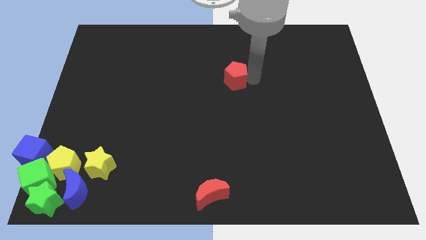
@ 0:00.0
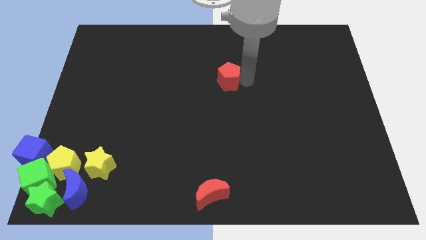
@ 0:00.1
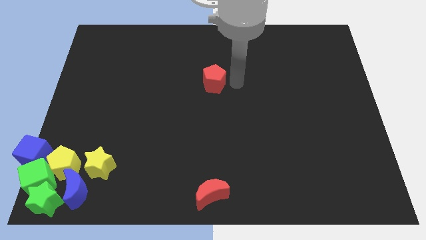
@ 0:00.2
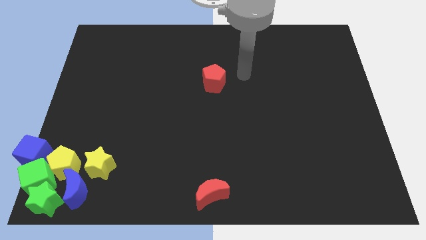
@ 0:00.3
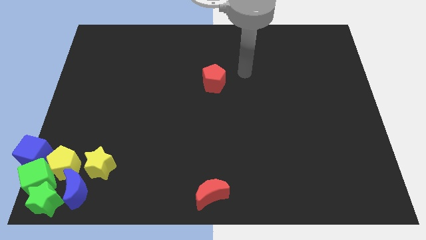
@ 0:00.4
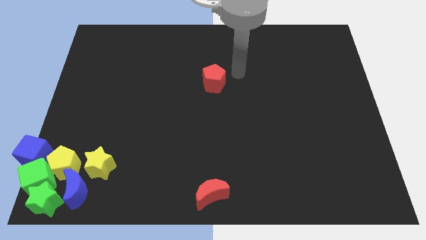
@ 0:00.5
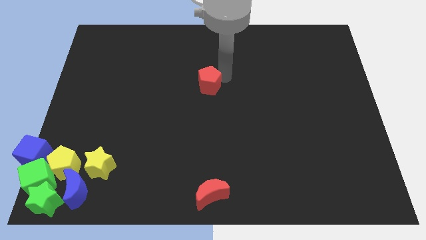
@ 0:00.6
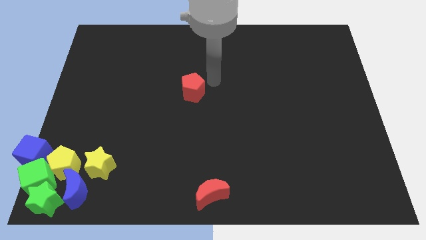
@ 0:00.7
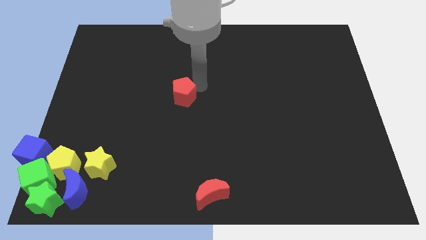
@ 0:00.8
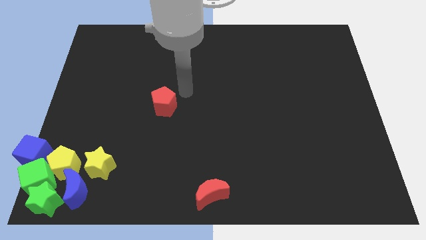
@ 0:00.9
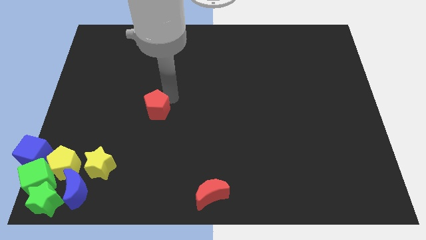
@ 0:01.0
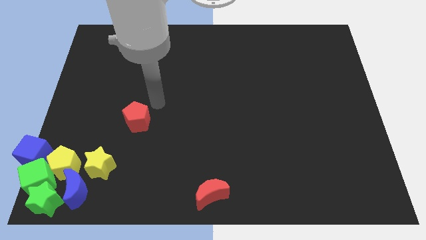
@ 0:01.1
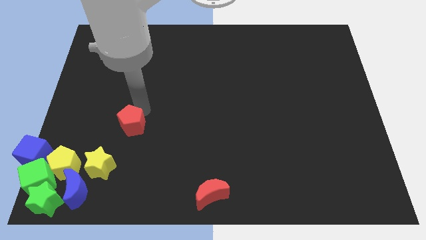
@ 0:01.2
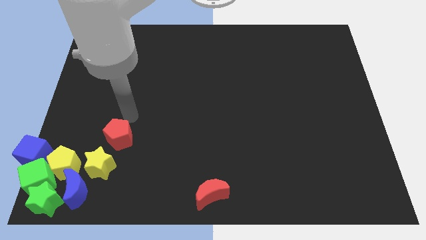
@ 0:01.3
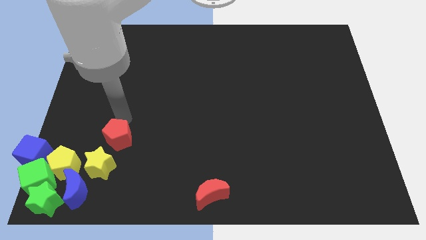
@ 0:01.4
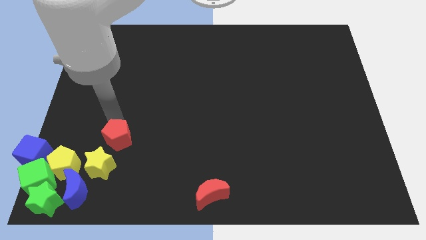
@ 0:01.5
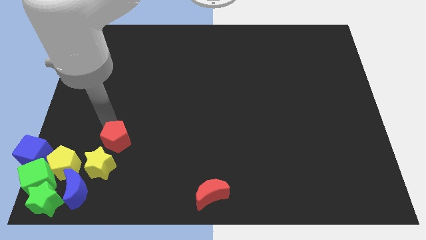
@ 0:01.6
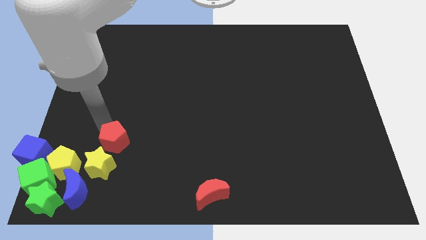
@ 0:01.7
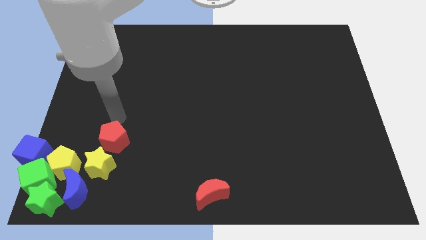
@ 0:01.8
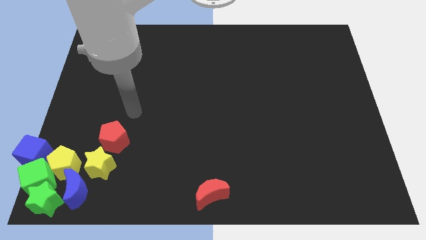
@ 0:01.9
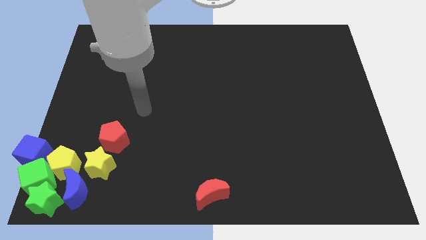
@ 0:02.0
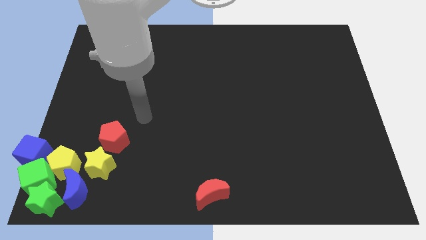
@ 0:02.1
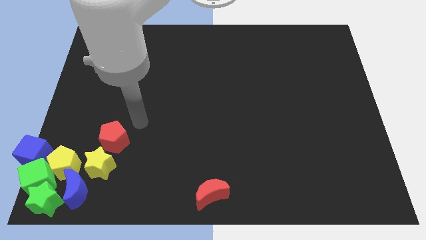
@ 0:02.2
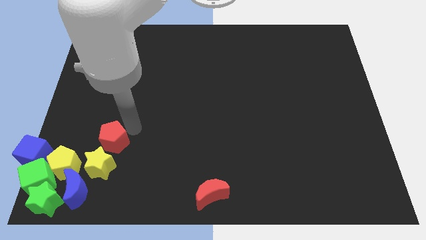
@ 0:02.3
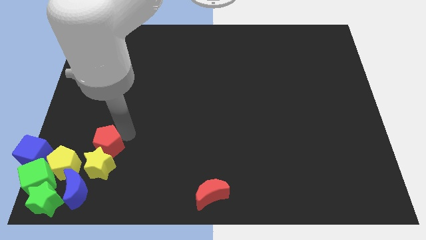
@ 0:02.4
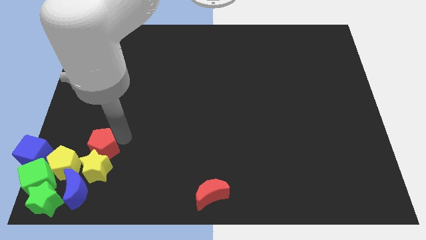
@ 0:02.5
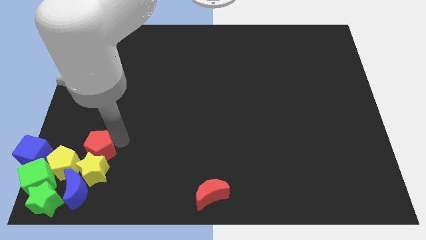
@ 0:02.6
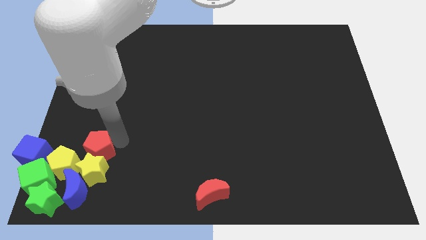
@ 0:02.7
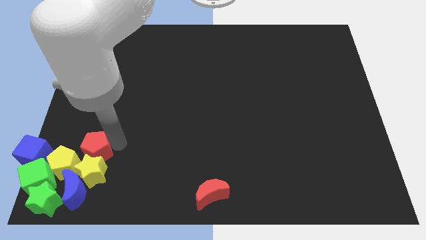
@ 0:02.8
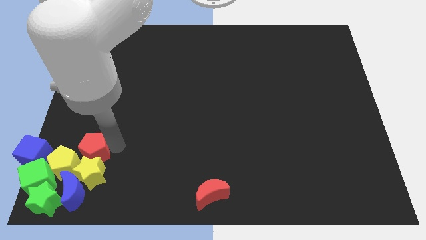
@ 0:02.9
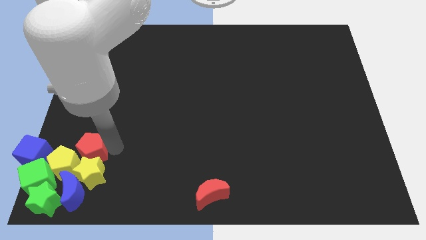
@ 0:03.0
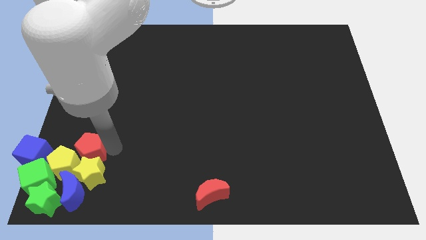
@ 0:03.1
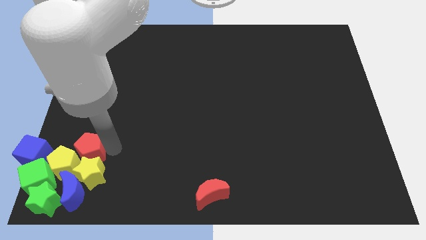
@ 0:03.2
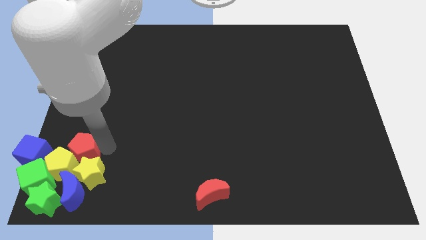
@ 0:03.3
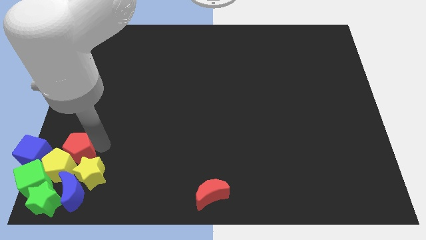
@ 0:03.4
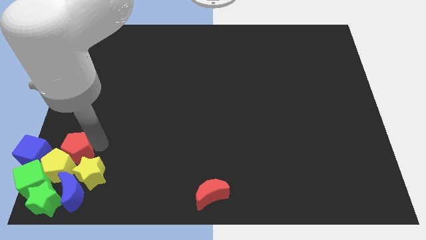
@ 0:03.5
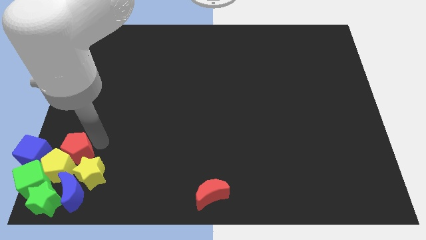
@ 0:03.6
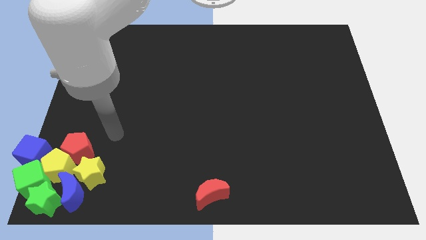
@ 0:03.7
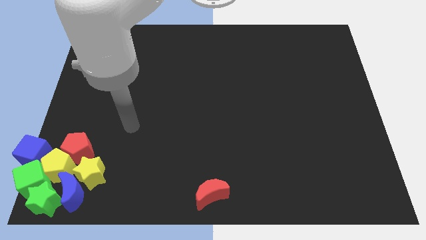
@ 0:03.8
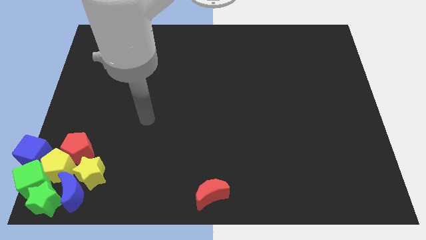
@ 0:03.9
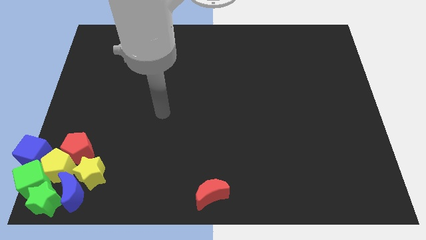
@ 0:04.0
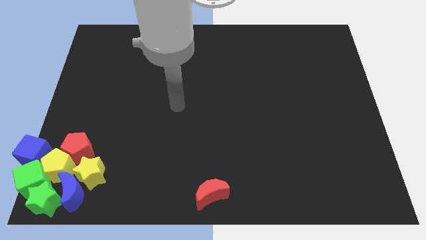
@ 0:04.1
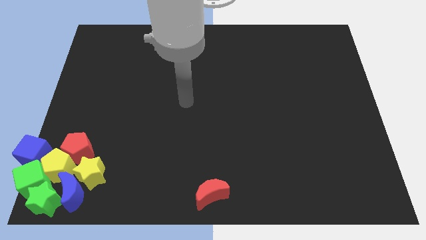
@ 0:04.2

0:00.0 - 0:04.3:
push the red pentagon towards the yellow pentagon

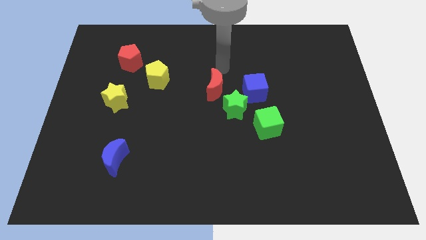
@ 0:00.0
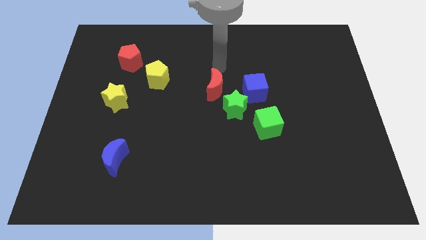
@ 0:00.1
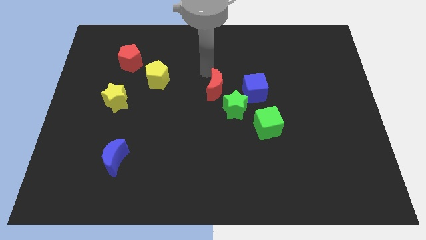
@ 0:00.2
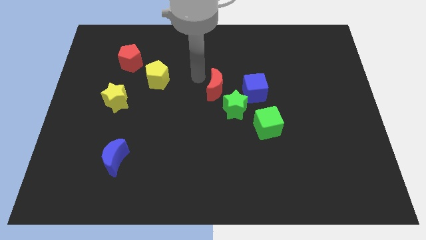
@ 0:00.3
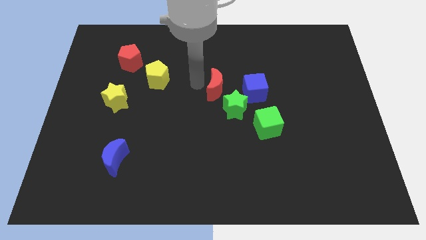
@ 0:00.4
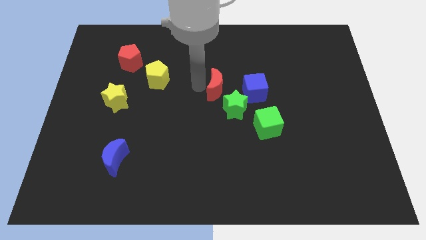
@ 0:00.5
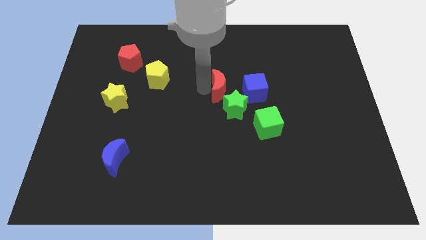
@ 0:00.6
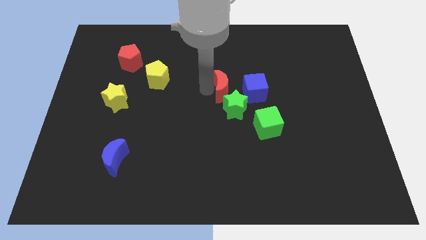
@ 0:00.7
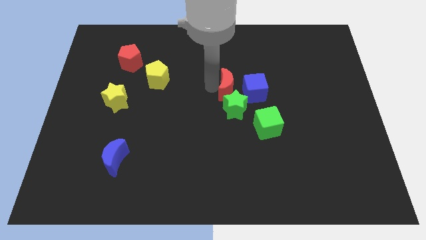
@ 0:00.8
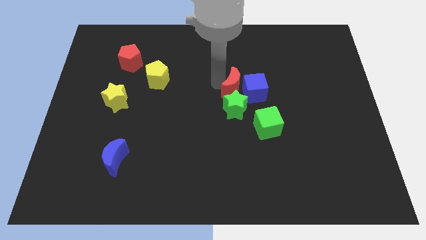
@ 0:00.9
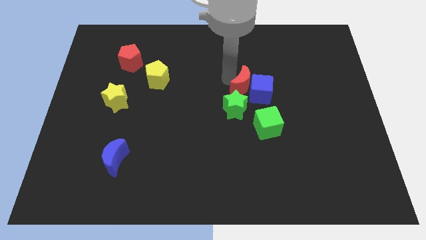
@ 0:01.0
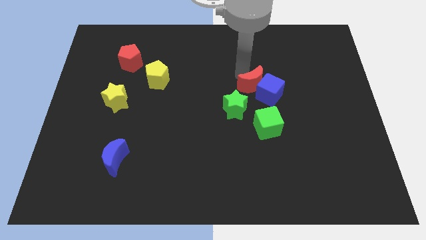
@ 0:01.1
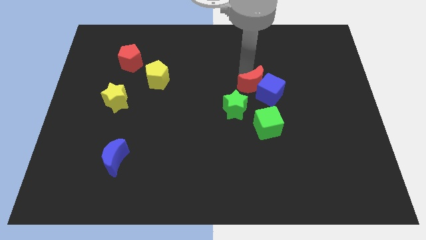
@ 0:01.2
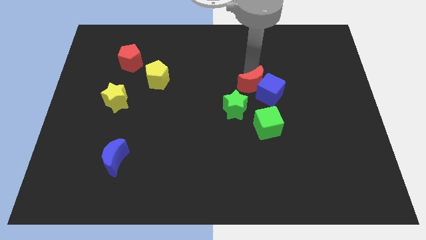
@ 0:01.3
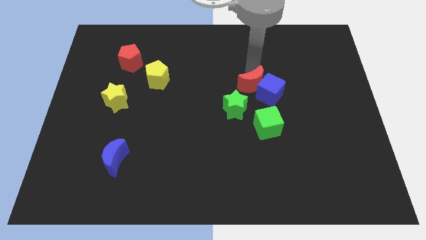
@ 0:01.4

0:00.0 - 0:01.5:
push the red moon into the blue cube

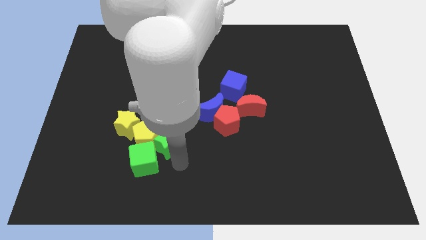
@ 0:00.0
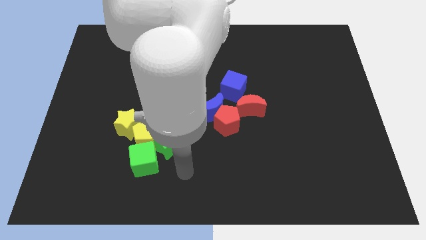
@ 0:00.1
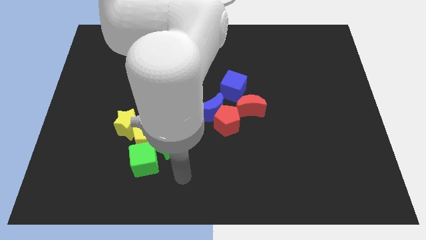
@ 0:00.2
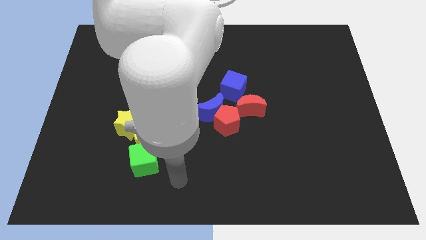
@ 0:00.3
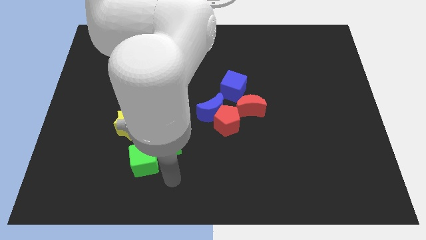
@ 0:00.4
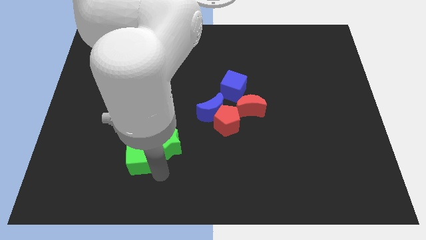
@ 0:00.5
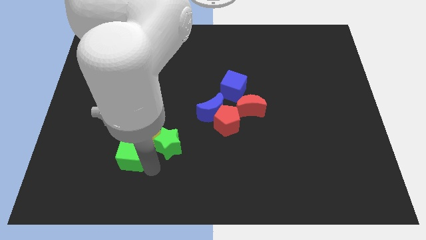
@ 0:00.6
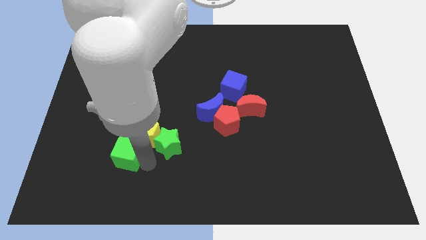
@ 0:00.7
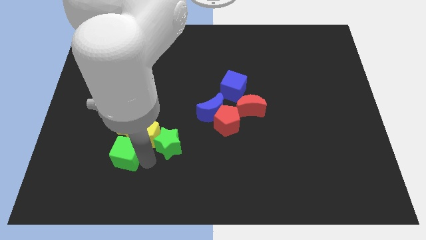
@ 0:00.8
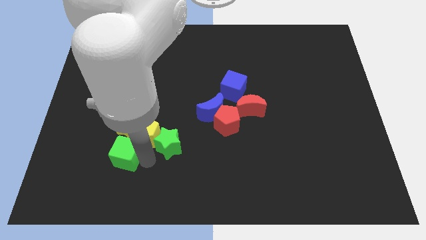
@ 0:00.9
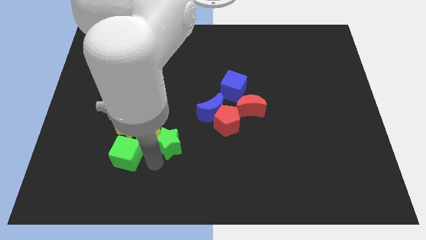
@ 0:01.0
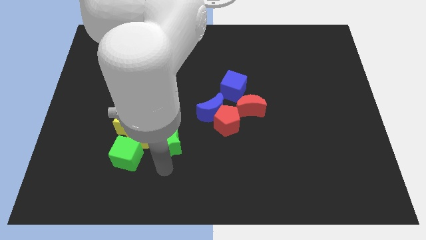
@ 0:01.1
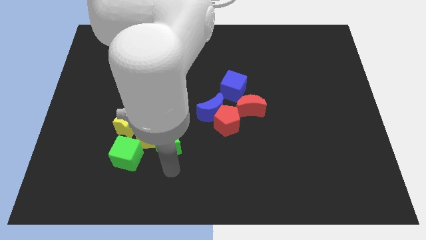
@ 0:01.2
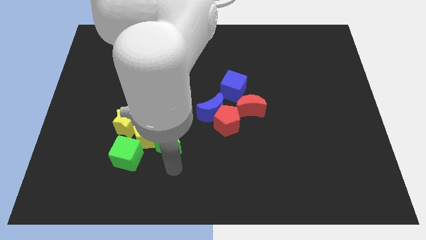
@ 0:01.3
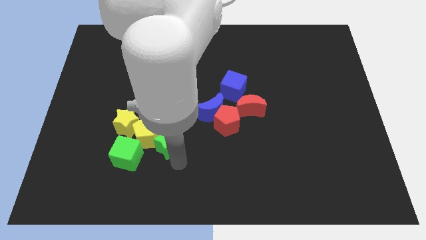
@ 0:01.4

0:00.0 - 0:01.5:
move green cube towards bottom of the yellow pentagon

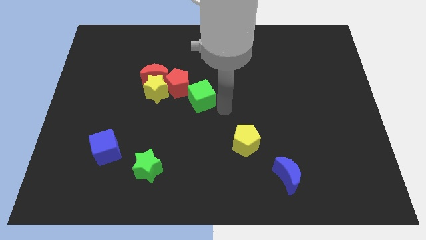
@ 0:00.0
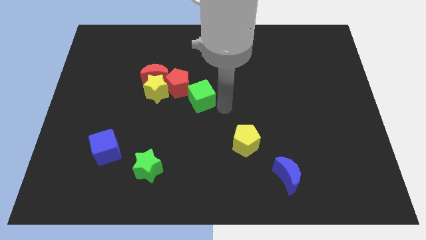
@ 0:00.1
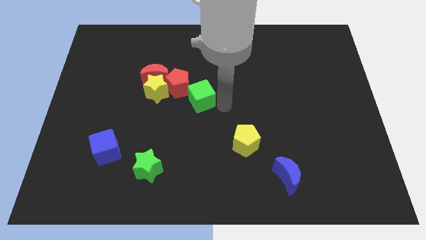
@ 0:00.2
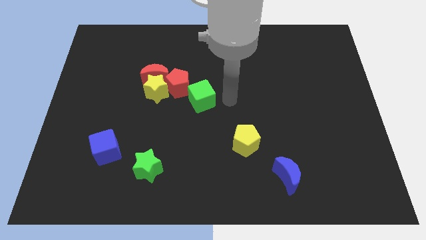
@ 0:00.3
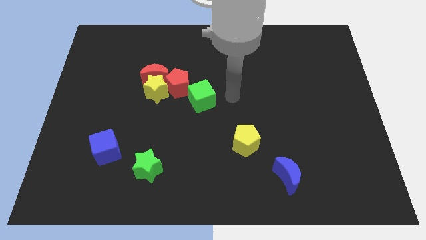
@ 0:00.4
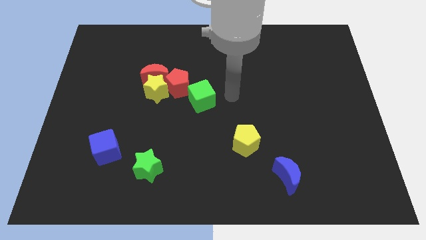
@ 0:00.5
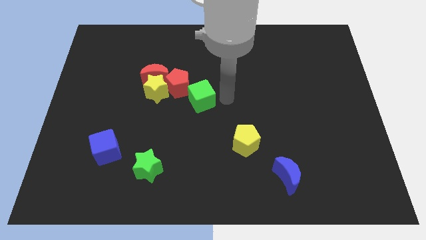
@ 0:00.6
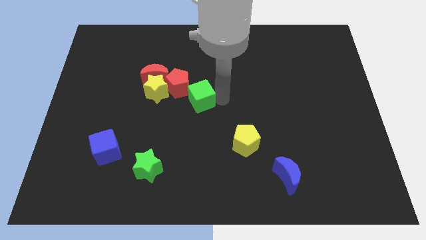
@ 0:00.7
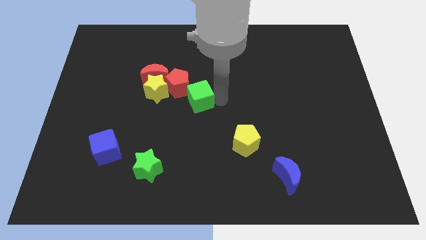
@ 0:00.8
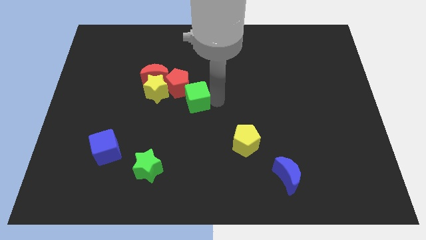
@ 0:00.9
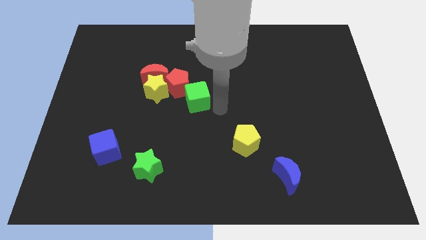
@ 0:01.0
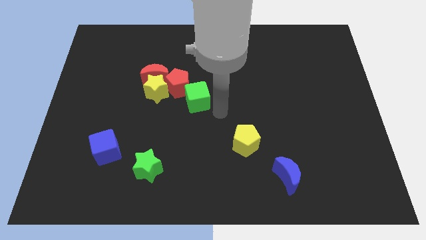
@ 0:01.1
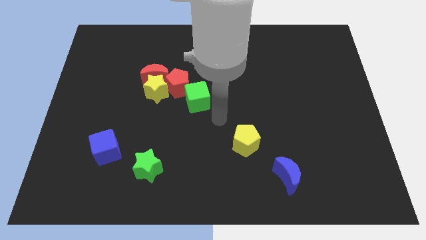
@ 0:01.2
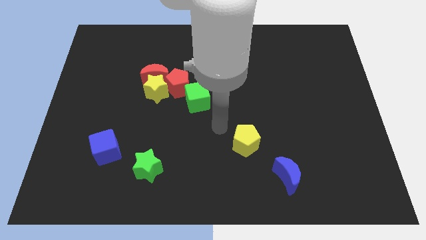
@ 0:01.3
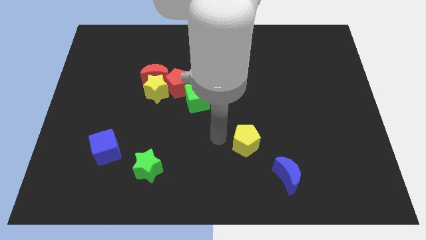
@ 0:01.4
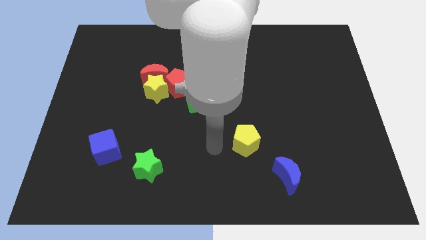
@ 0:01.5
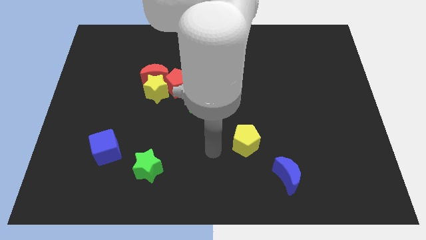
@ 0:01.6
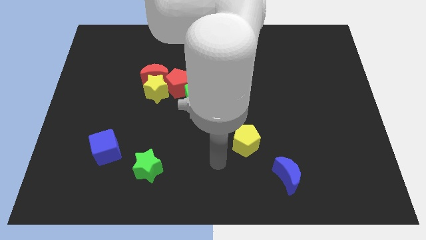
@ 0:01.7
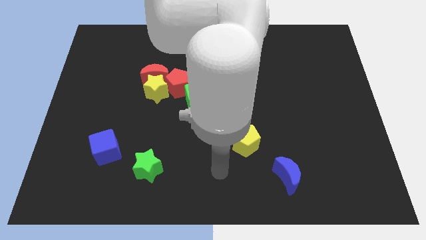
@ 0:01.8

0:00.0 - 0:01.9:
move green cube slightly right
